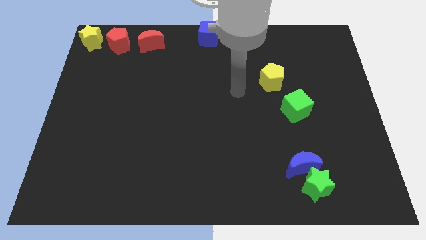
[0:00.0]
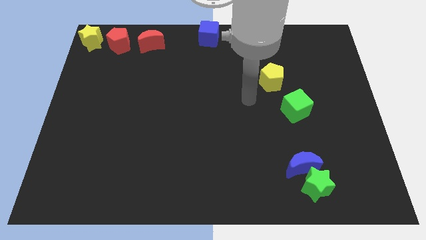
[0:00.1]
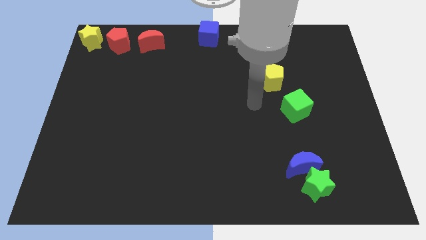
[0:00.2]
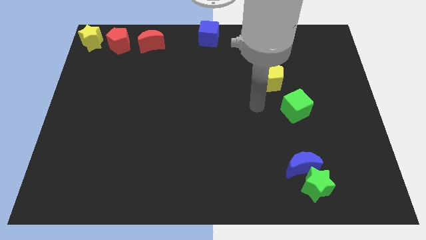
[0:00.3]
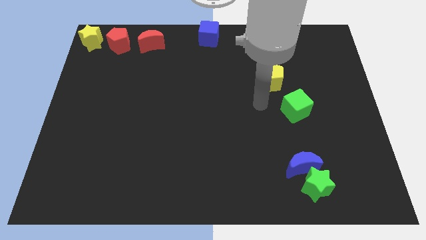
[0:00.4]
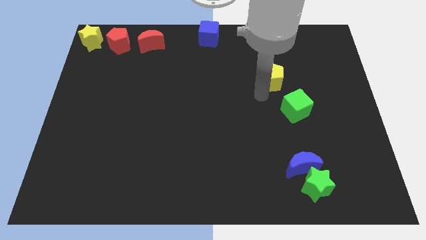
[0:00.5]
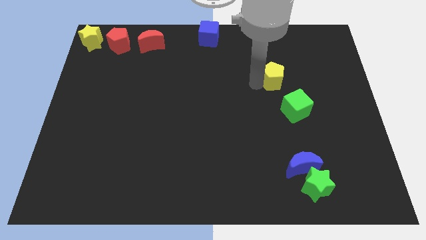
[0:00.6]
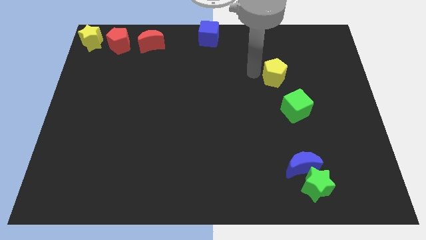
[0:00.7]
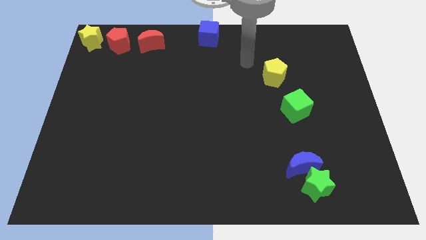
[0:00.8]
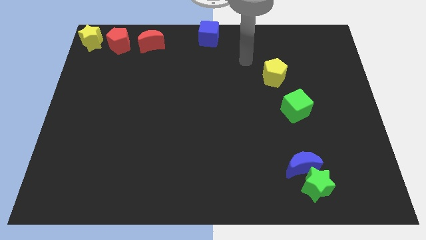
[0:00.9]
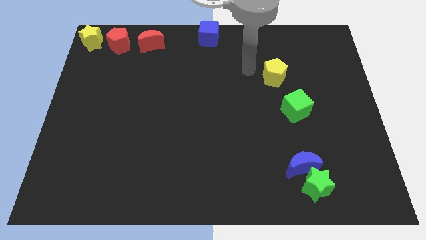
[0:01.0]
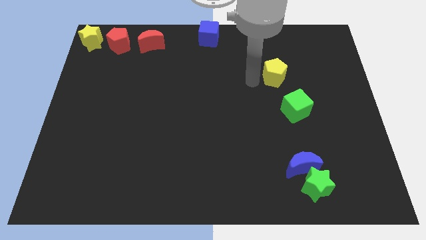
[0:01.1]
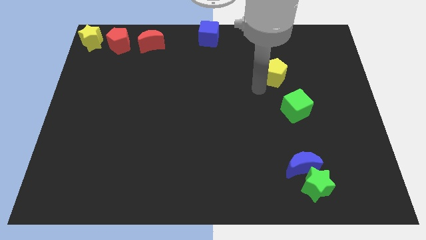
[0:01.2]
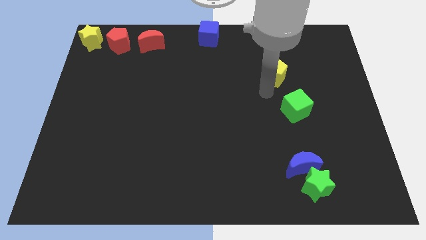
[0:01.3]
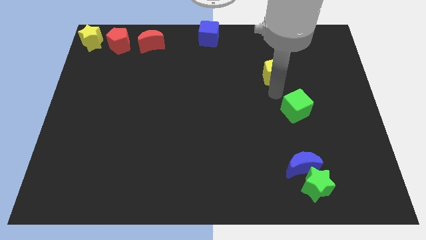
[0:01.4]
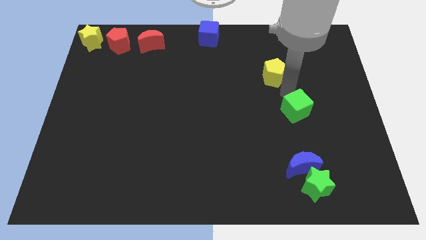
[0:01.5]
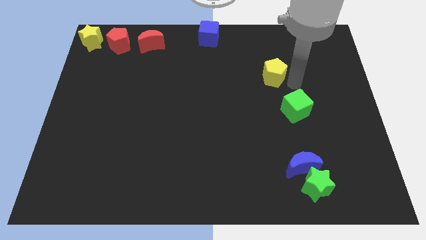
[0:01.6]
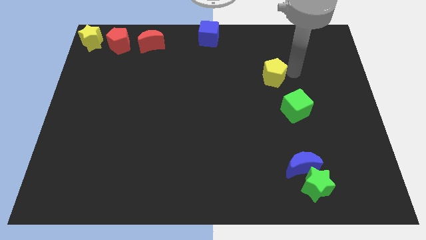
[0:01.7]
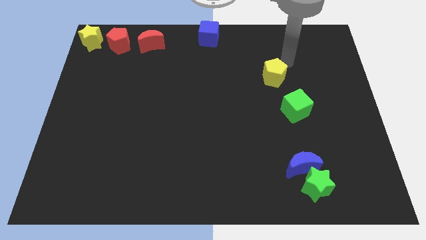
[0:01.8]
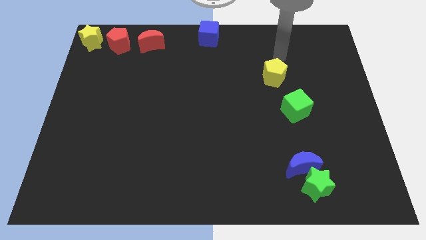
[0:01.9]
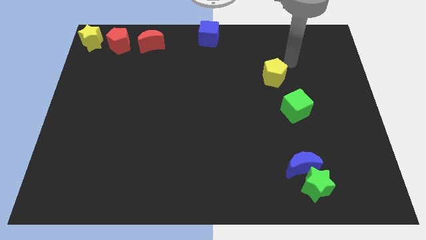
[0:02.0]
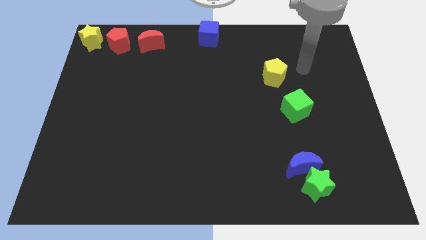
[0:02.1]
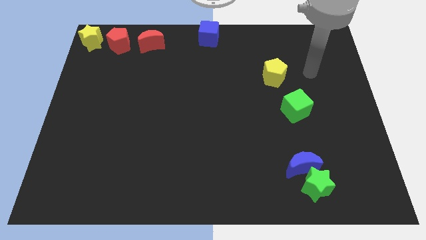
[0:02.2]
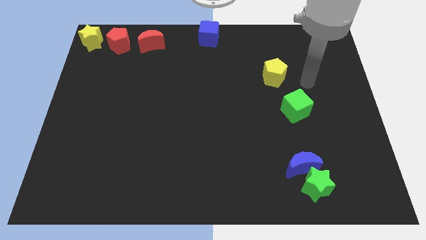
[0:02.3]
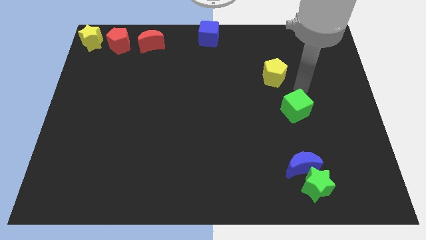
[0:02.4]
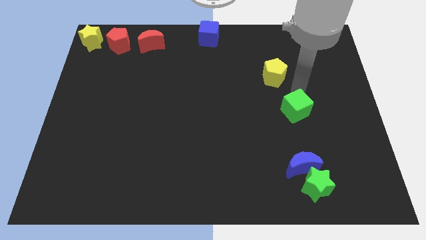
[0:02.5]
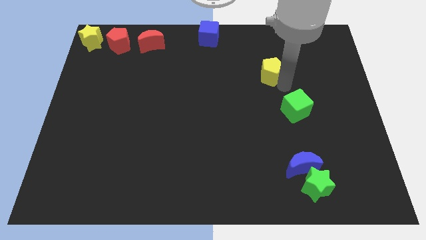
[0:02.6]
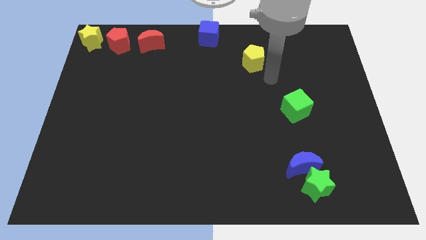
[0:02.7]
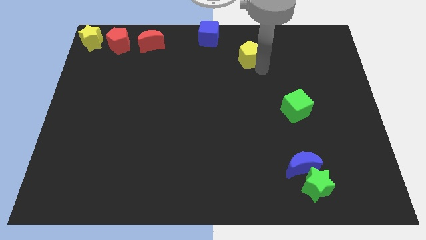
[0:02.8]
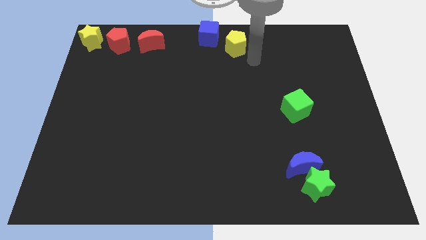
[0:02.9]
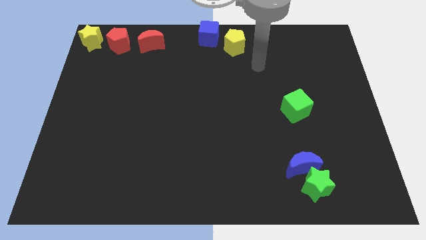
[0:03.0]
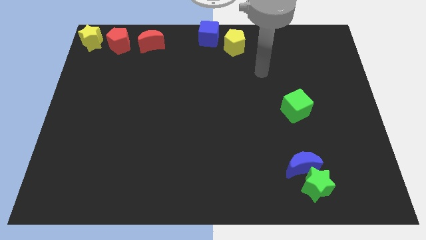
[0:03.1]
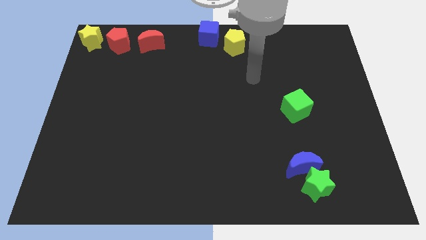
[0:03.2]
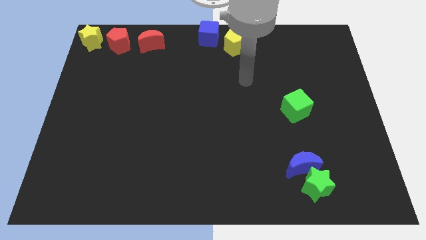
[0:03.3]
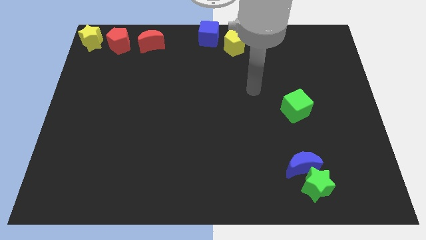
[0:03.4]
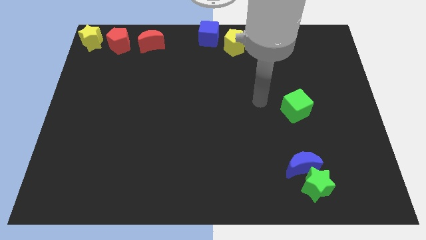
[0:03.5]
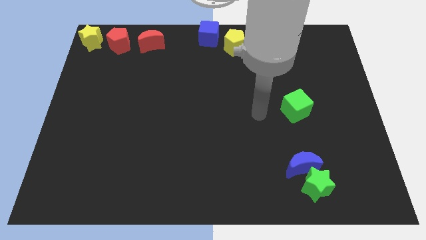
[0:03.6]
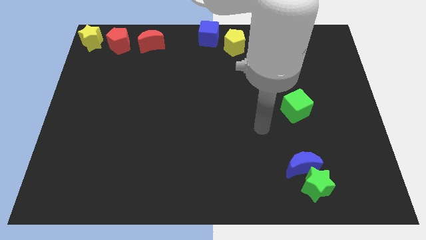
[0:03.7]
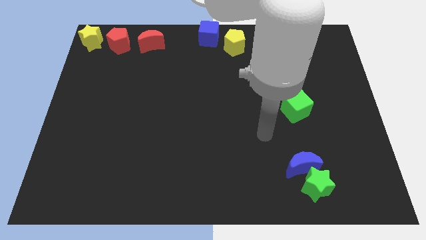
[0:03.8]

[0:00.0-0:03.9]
push the yellow pentagon to the bottom right side of the blue cube

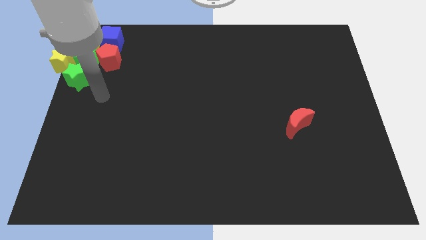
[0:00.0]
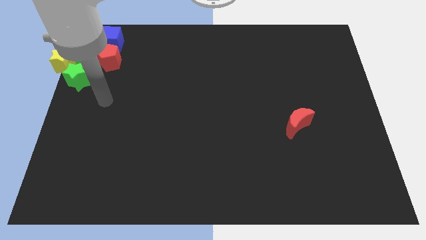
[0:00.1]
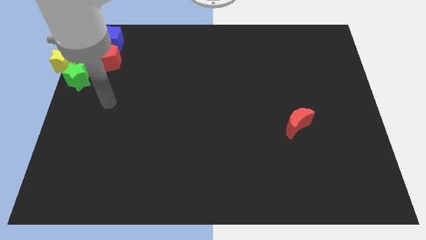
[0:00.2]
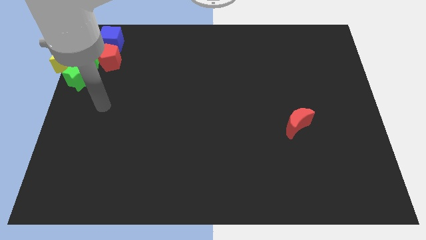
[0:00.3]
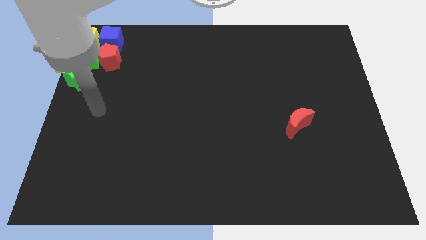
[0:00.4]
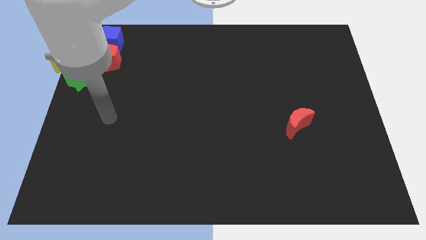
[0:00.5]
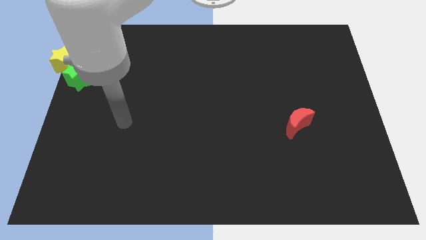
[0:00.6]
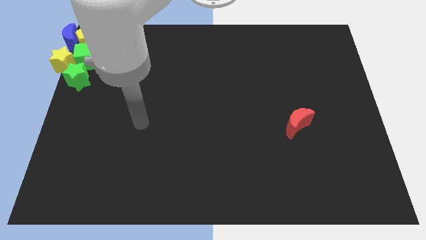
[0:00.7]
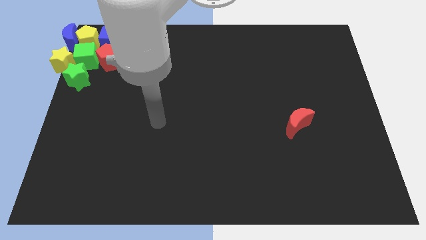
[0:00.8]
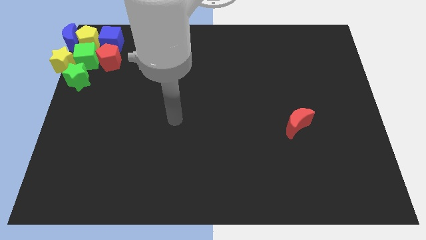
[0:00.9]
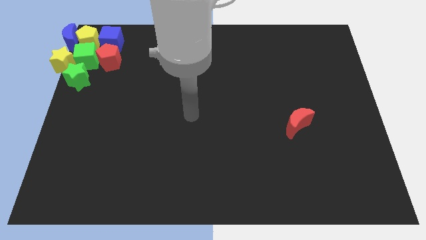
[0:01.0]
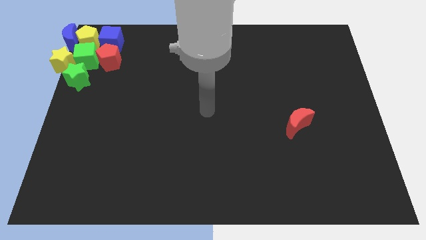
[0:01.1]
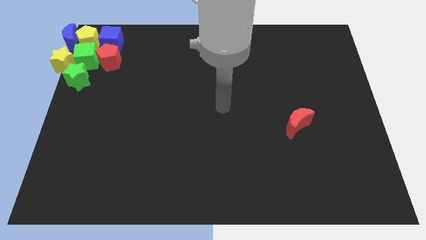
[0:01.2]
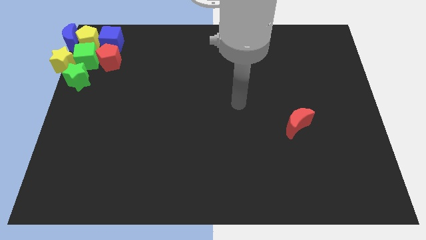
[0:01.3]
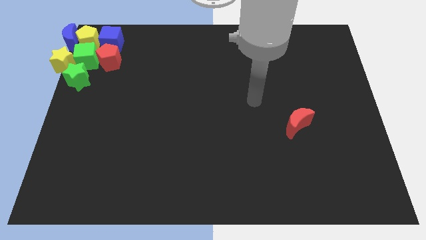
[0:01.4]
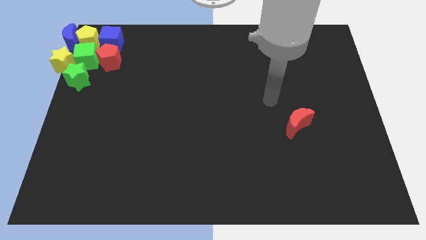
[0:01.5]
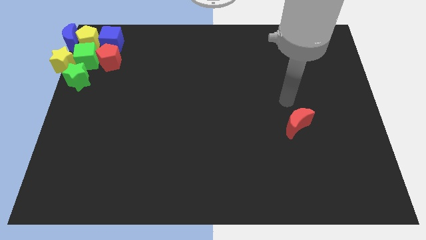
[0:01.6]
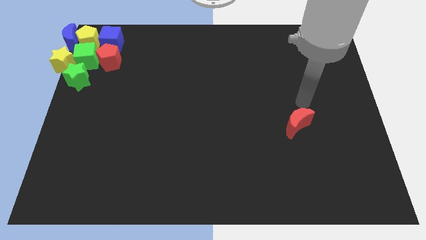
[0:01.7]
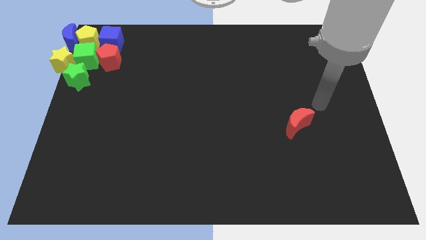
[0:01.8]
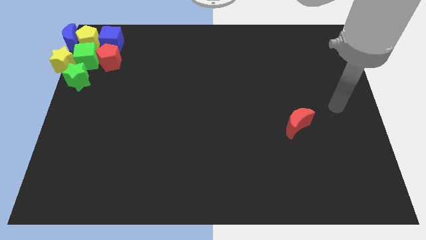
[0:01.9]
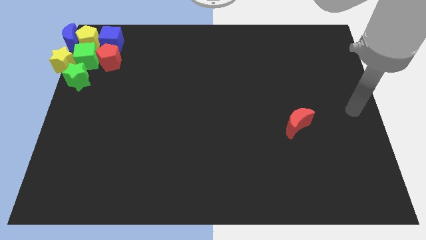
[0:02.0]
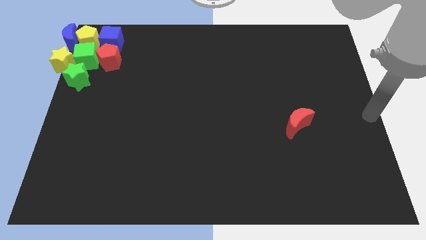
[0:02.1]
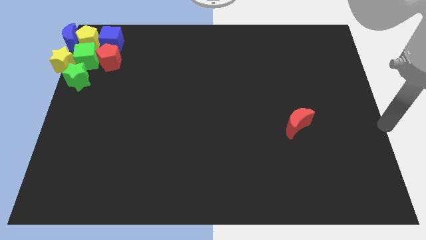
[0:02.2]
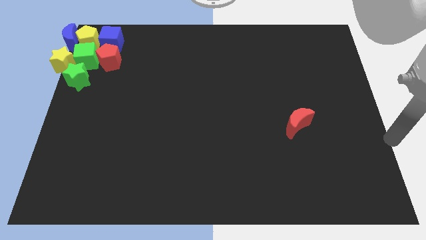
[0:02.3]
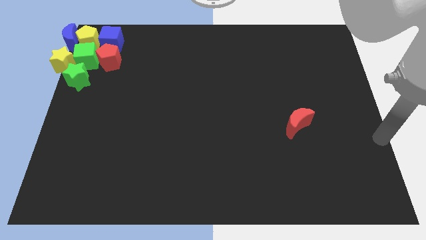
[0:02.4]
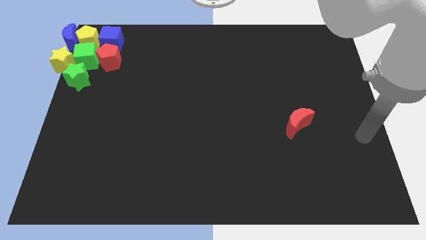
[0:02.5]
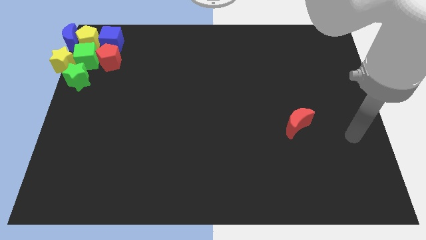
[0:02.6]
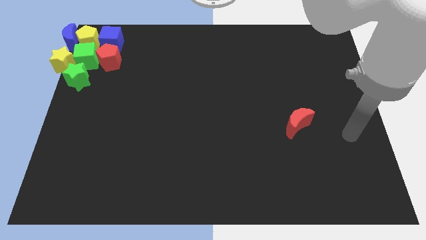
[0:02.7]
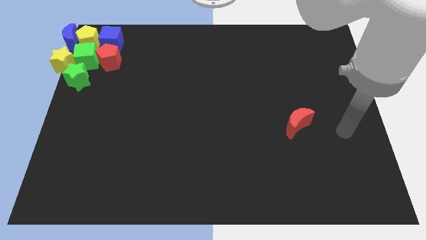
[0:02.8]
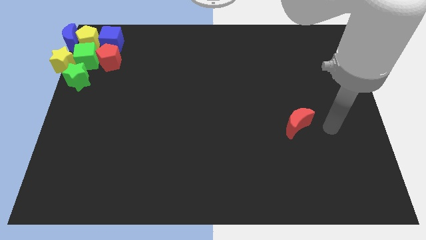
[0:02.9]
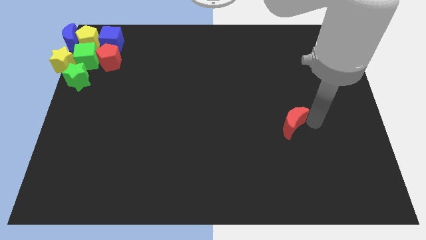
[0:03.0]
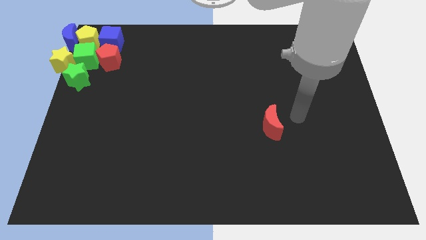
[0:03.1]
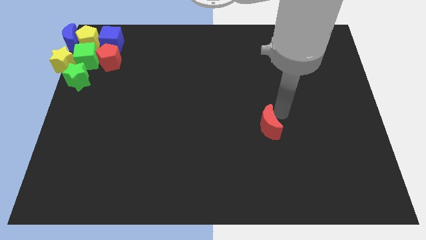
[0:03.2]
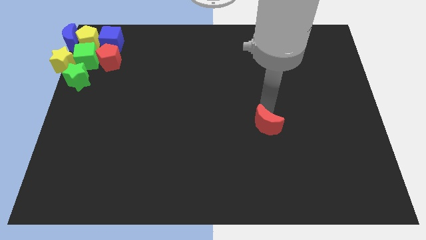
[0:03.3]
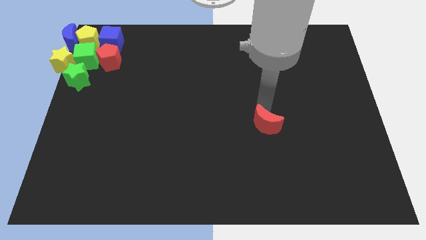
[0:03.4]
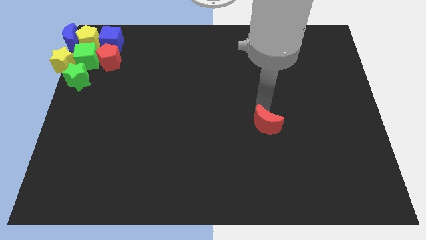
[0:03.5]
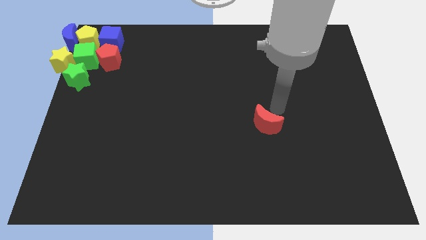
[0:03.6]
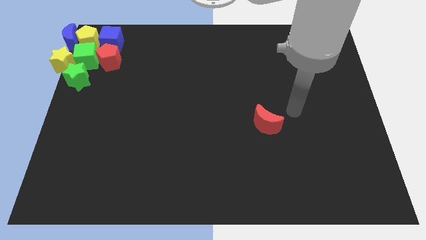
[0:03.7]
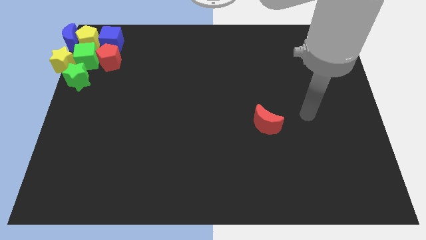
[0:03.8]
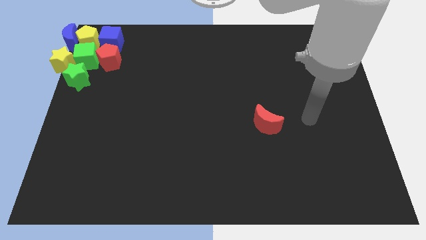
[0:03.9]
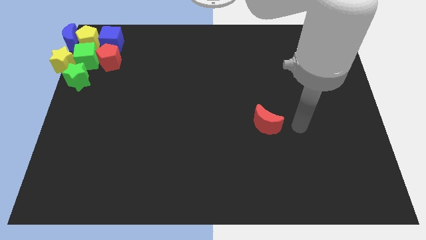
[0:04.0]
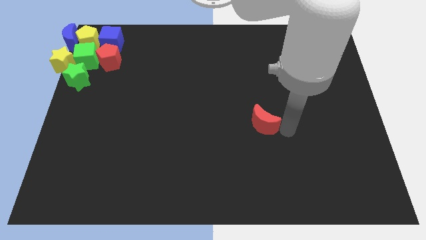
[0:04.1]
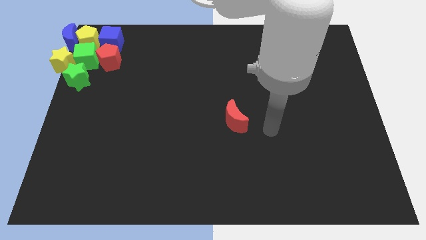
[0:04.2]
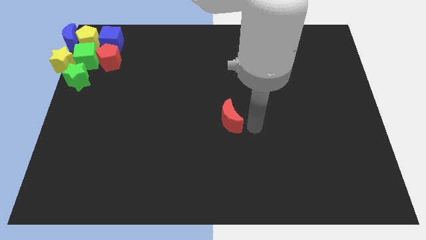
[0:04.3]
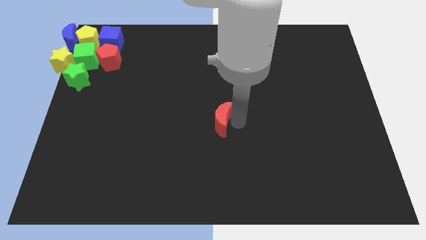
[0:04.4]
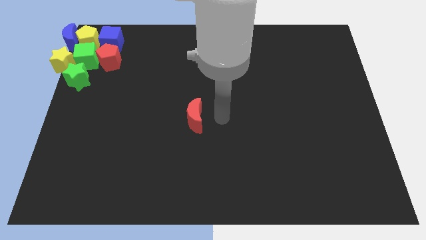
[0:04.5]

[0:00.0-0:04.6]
push the red moon towards the left side of the board

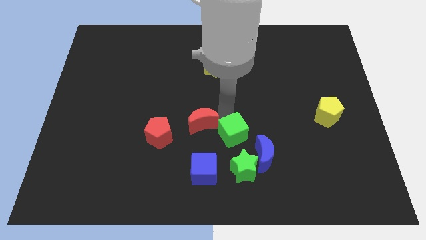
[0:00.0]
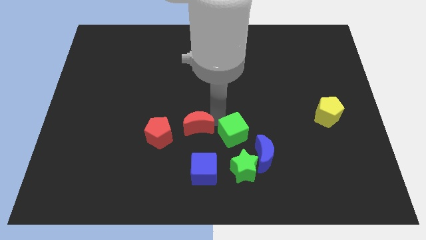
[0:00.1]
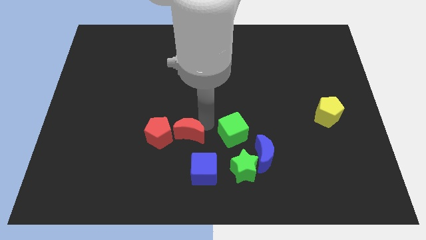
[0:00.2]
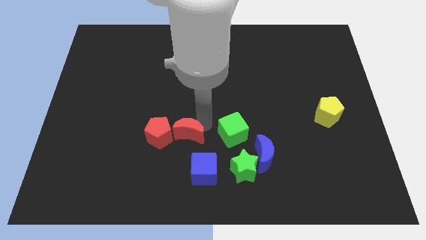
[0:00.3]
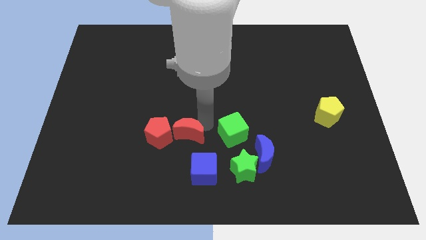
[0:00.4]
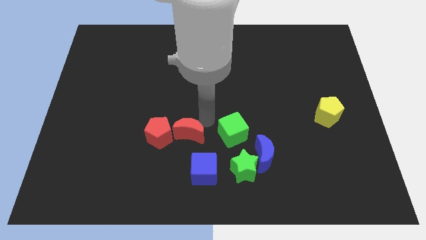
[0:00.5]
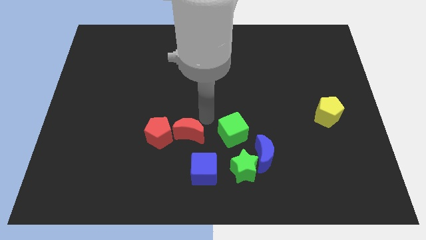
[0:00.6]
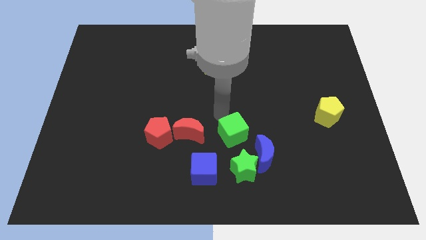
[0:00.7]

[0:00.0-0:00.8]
push the red moon towards red pentagon
